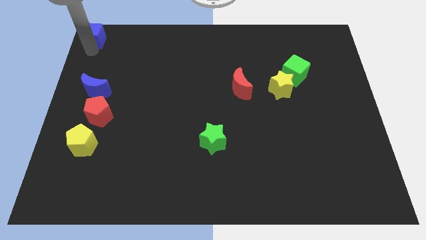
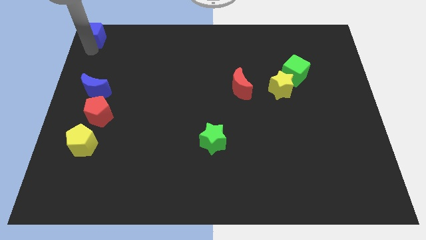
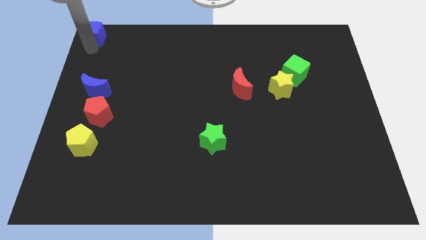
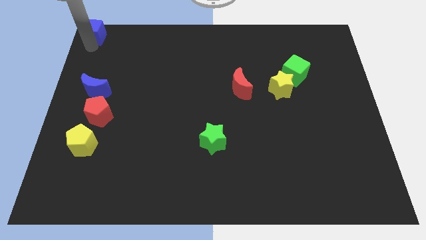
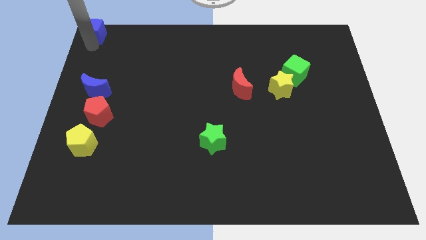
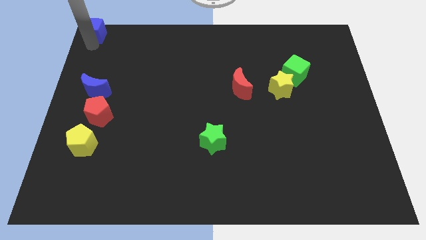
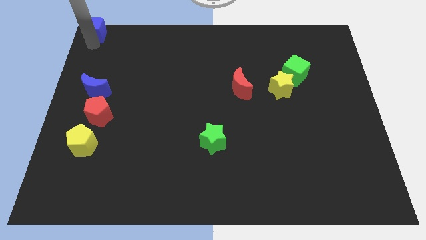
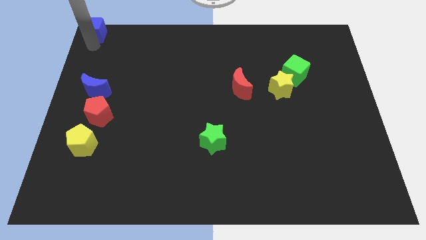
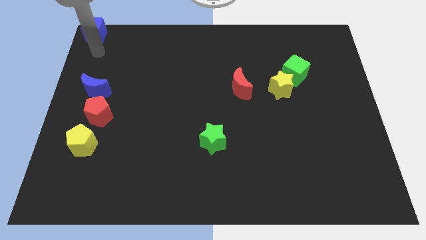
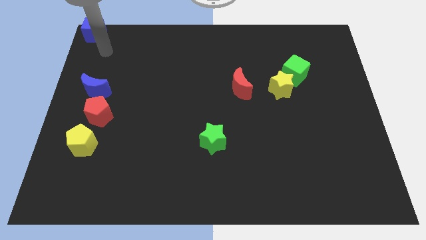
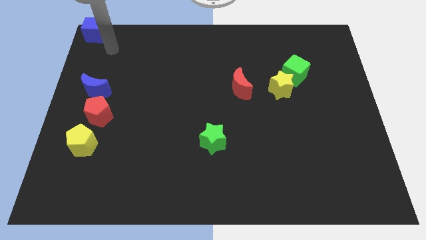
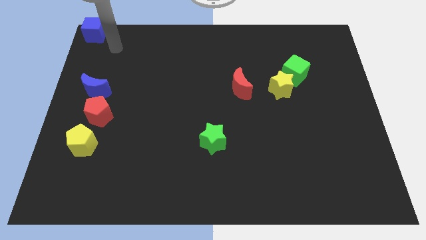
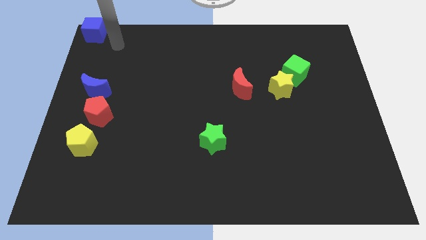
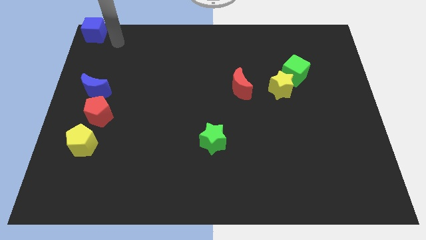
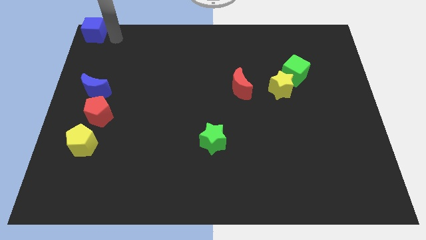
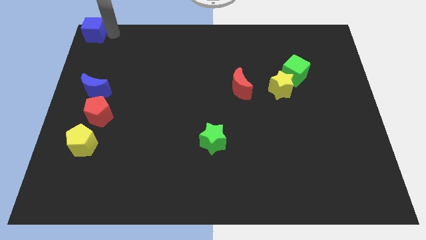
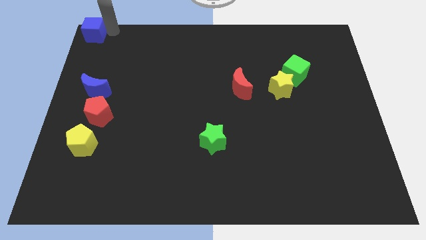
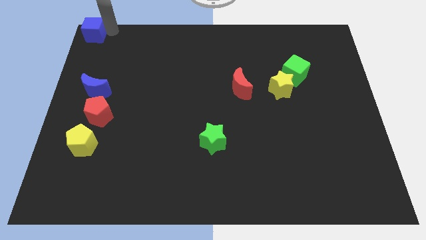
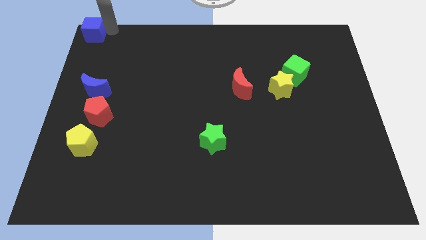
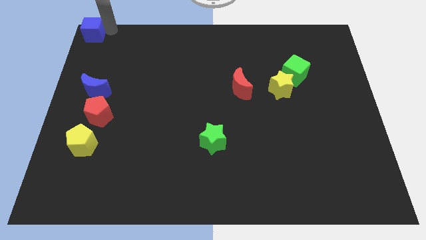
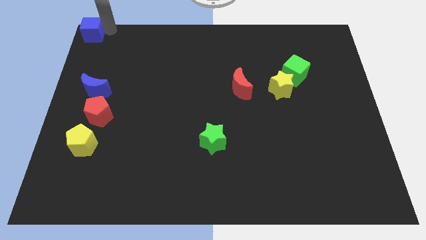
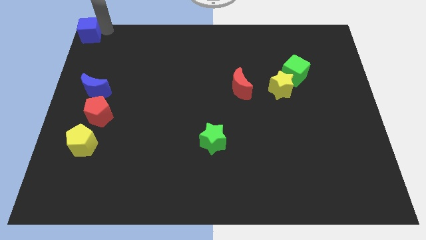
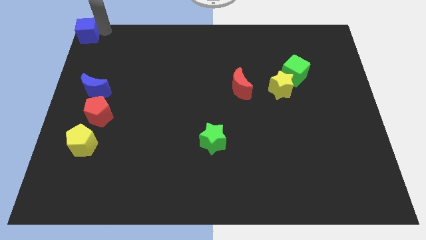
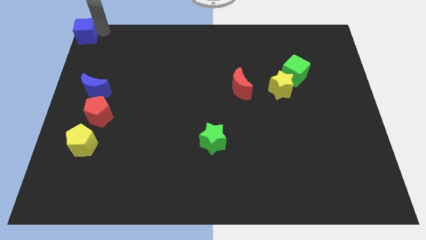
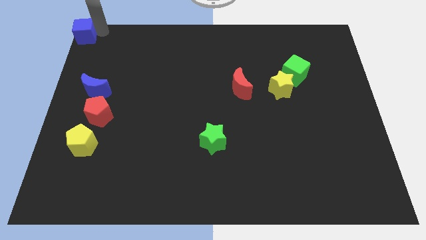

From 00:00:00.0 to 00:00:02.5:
move the blue top left corner of the board

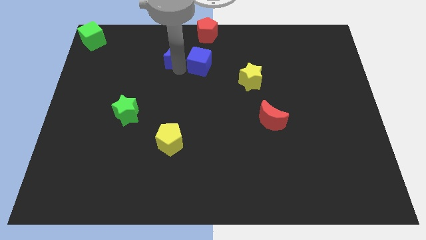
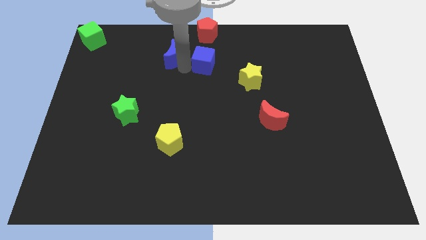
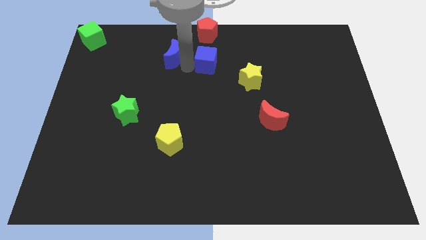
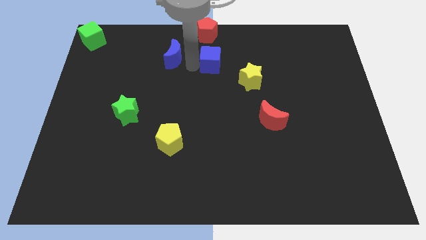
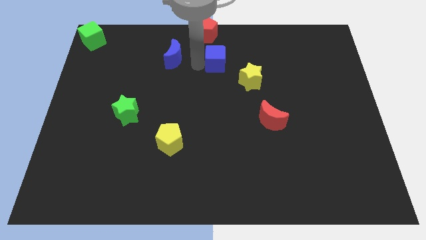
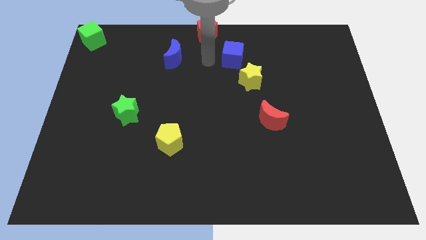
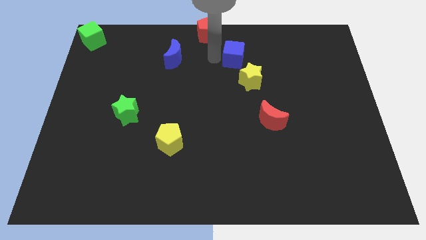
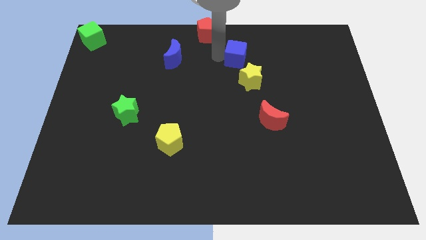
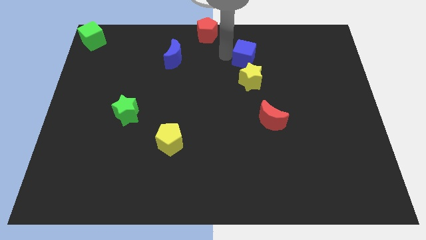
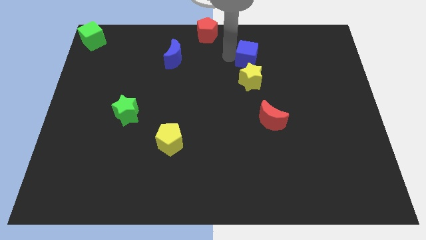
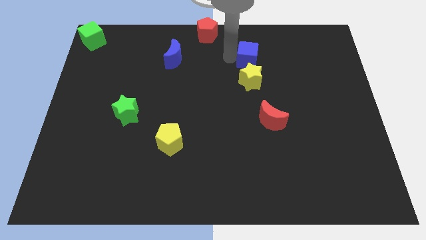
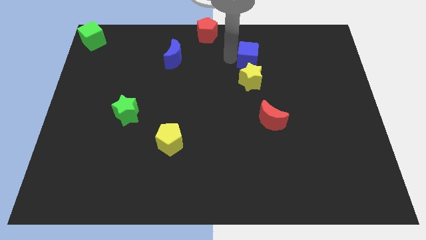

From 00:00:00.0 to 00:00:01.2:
move the blue cube above the yellow star

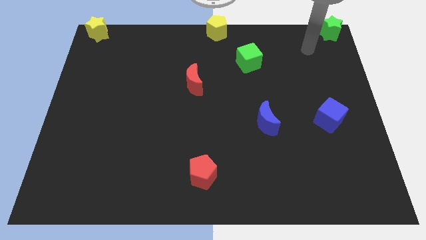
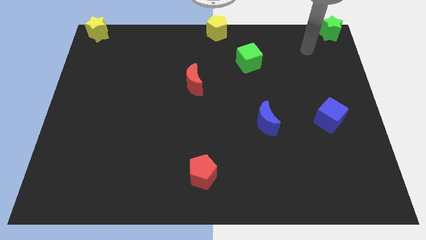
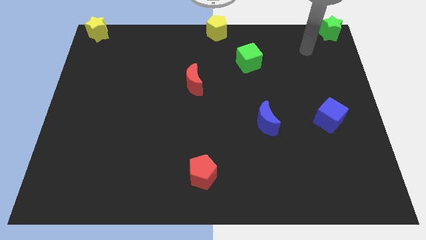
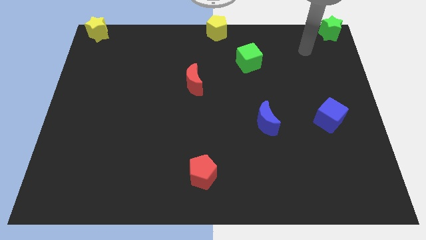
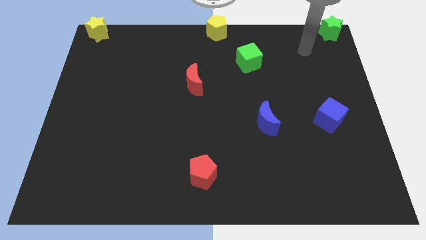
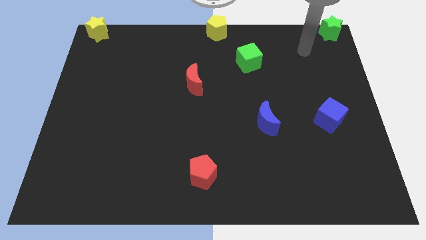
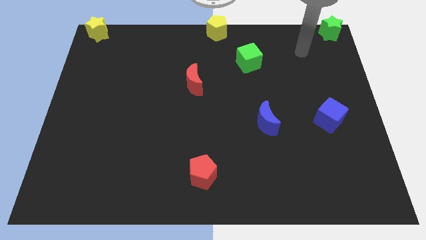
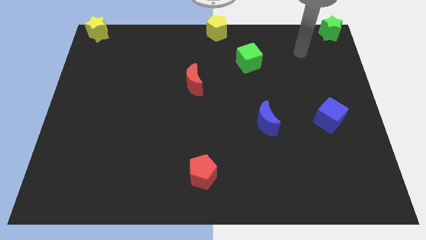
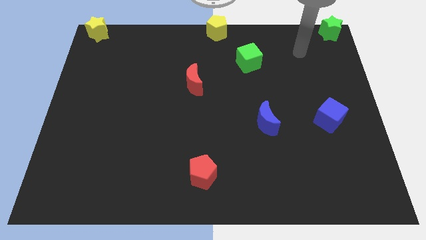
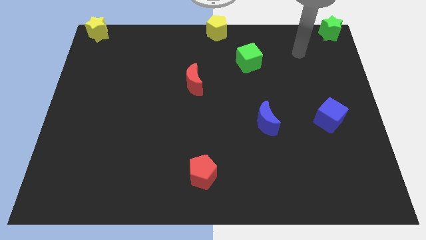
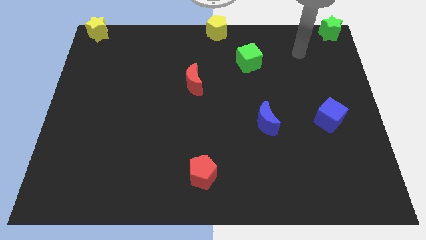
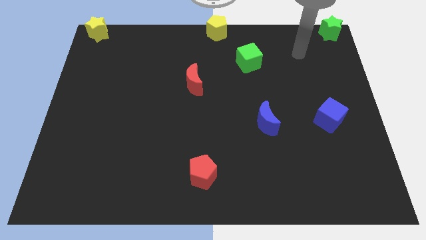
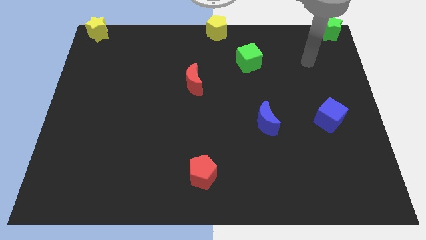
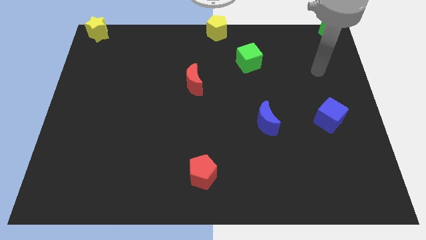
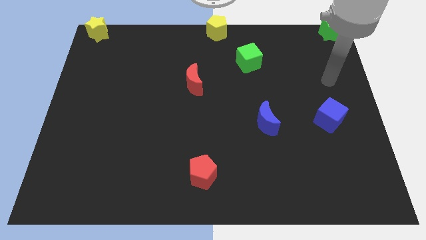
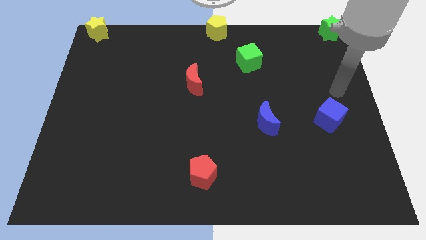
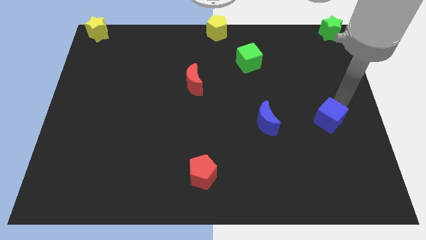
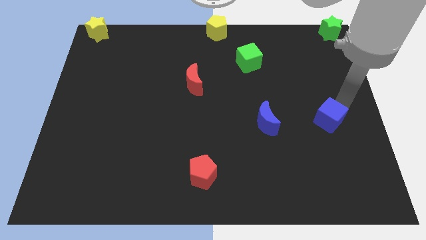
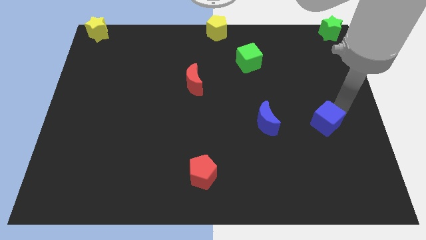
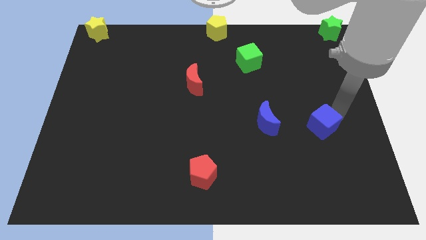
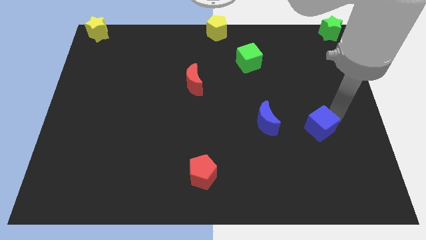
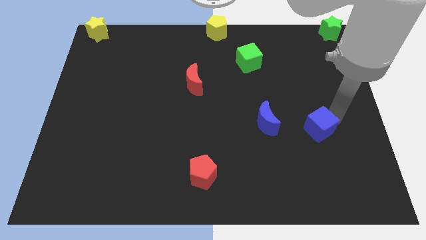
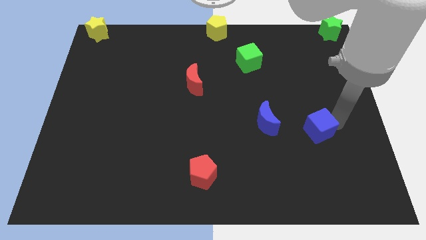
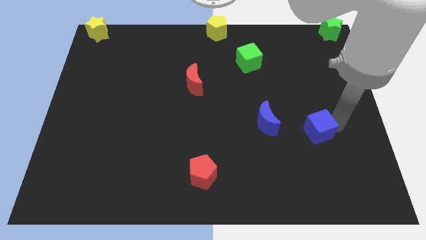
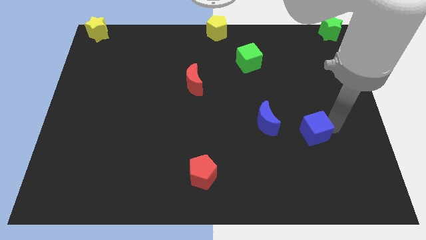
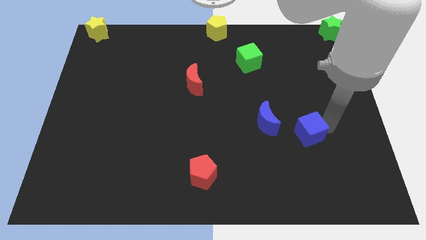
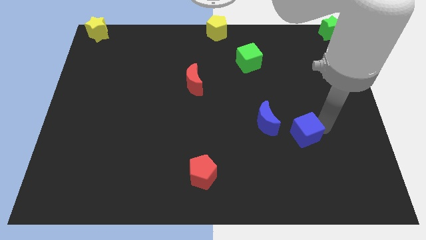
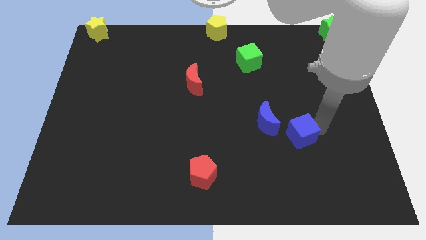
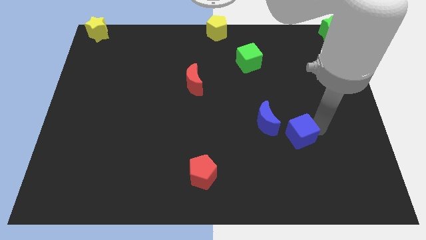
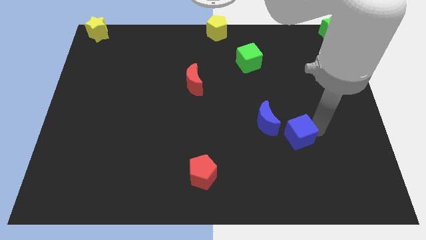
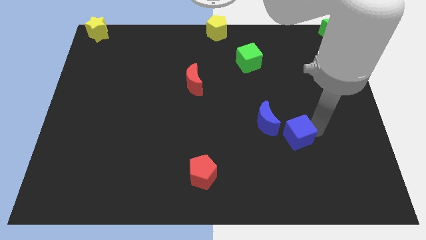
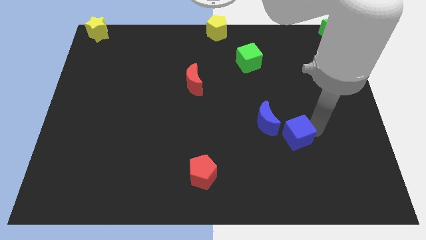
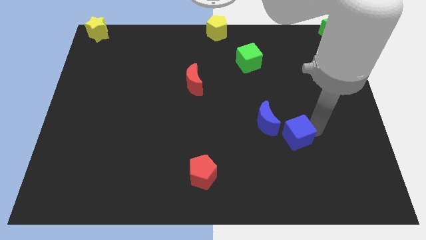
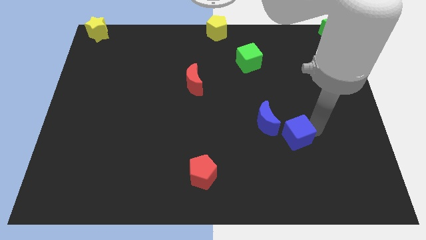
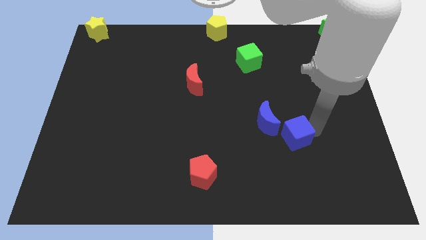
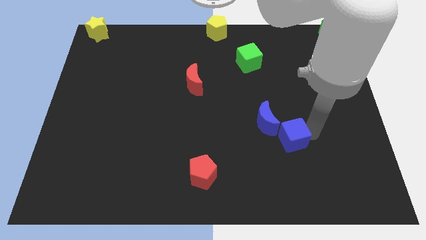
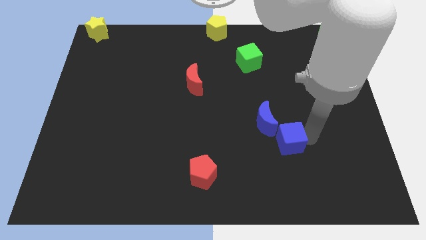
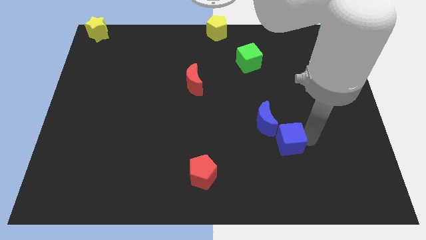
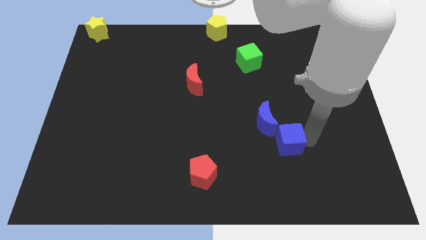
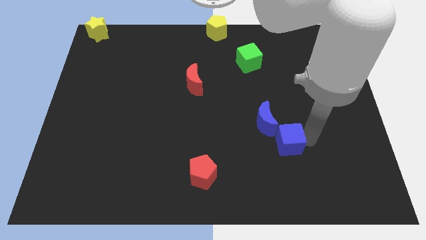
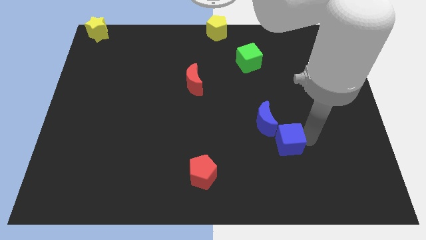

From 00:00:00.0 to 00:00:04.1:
put the blue cube at the bottom right of the blue moon

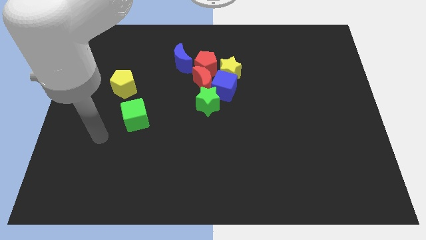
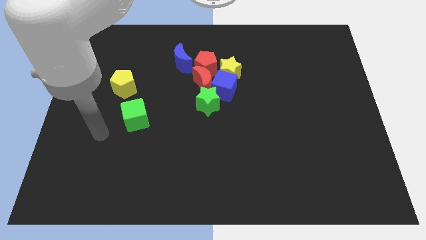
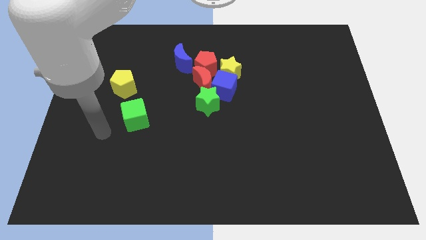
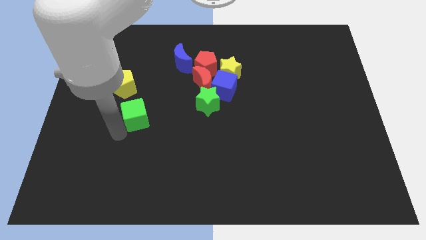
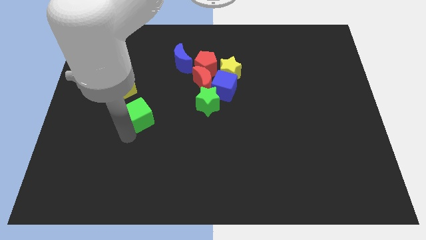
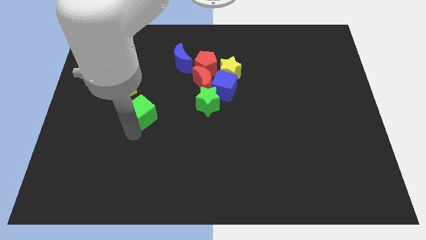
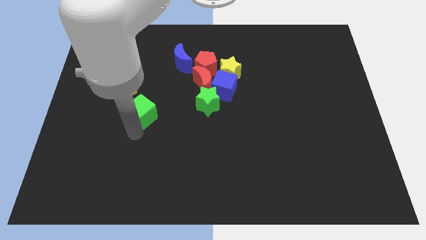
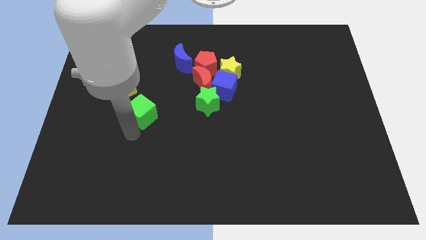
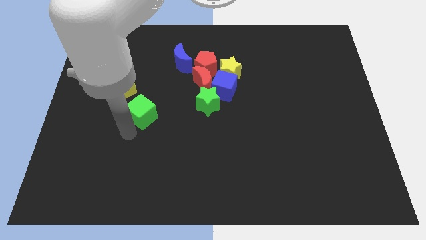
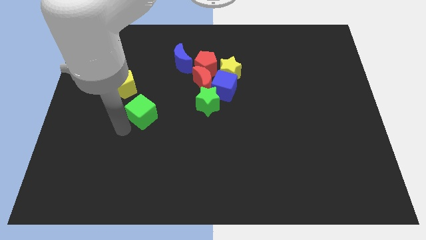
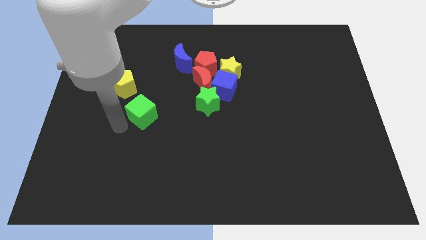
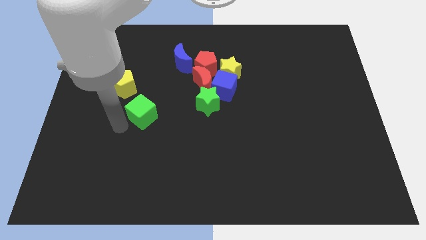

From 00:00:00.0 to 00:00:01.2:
slightly move the green cube below the yellow pentagon
